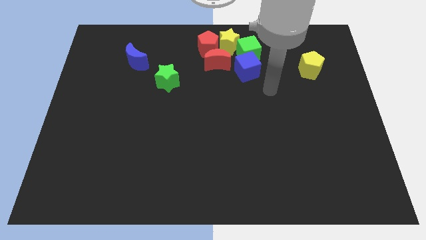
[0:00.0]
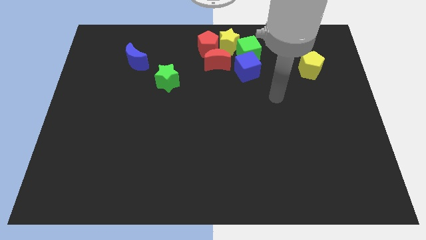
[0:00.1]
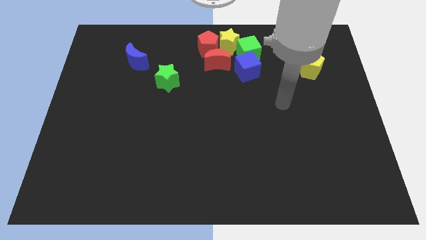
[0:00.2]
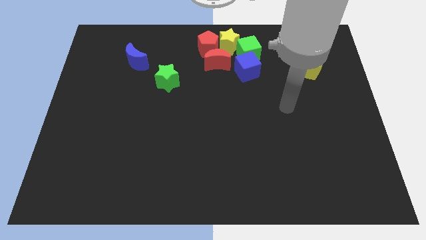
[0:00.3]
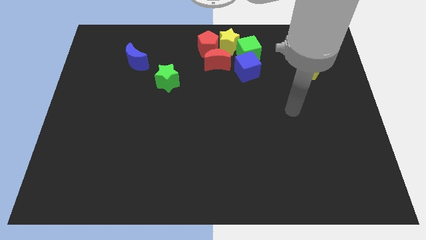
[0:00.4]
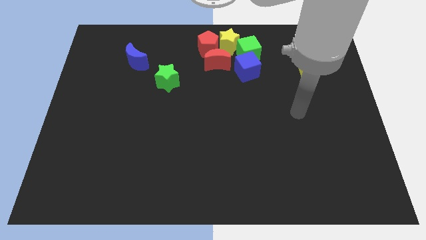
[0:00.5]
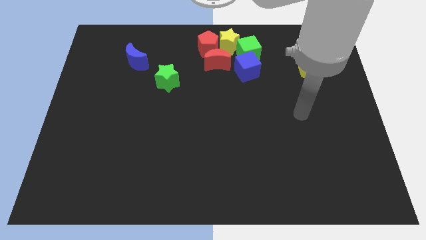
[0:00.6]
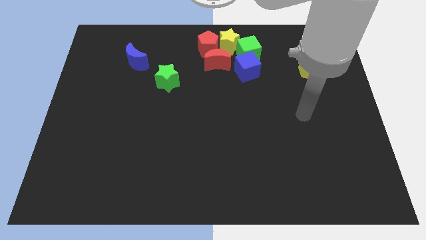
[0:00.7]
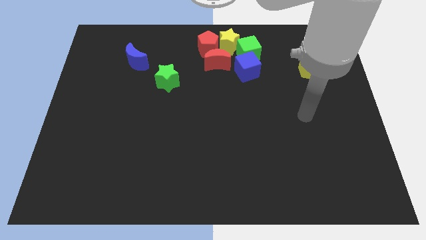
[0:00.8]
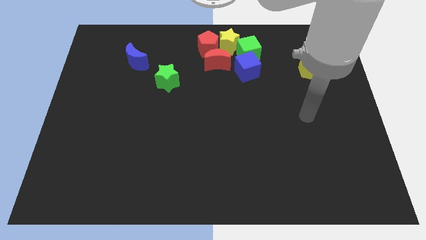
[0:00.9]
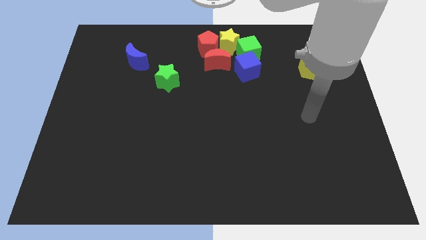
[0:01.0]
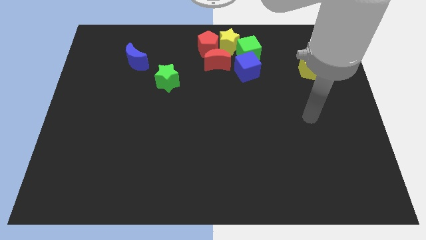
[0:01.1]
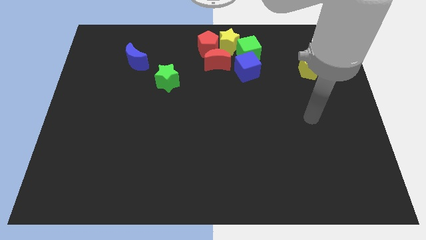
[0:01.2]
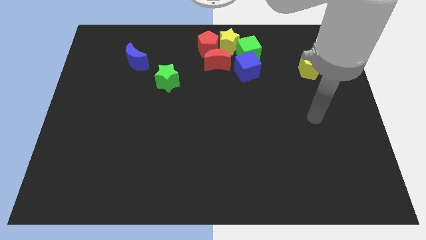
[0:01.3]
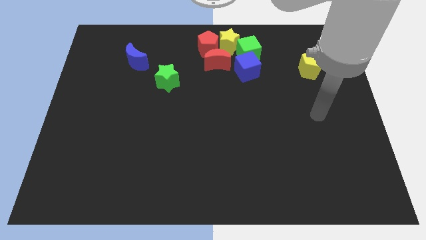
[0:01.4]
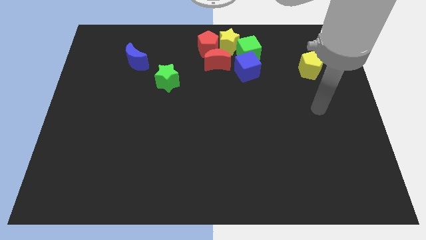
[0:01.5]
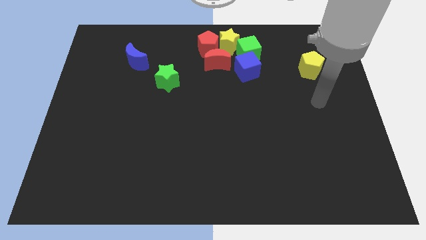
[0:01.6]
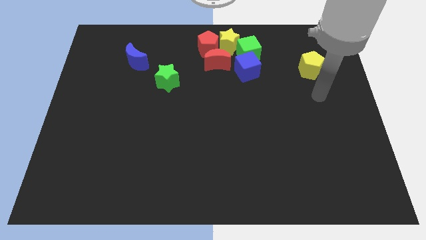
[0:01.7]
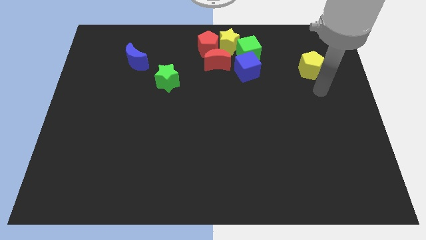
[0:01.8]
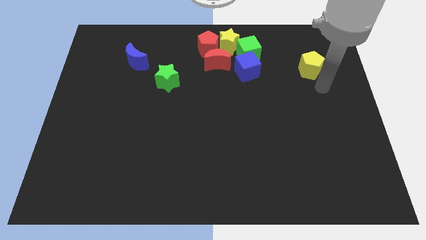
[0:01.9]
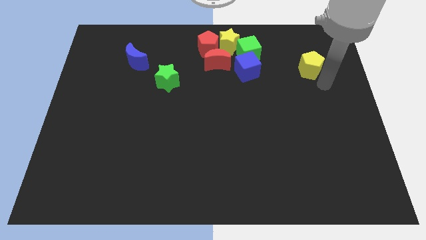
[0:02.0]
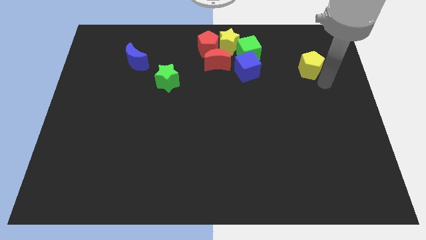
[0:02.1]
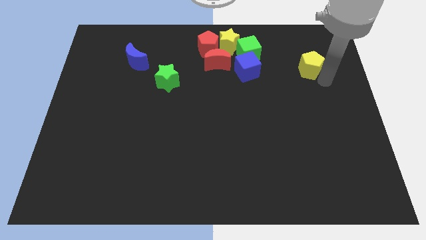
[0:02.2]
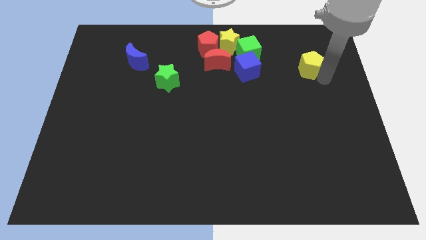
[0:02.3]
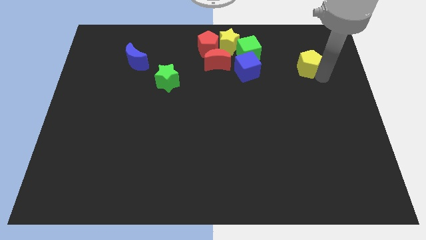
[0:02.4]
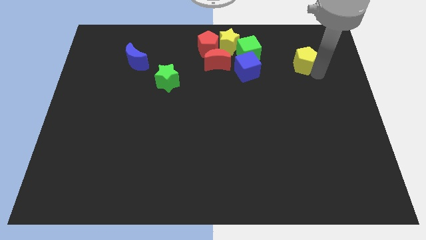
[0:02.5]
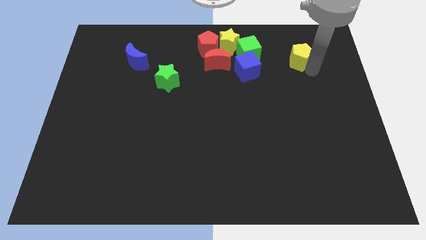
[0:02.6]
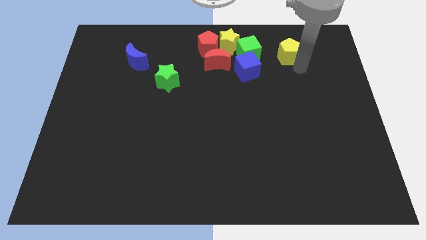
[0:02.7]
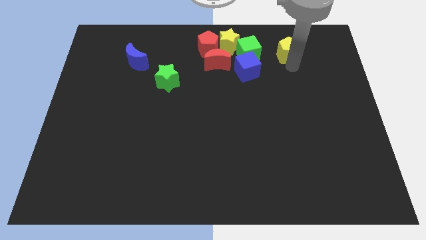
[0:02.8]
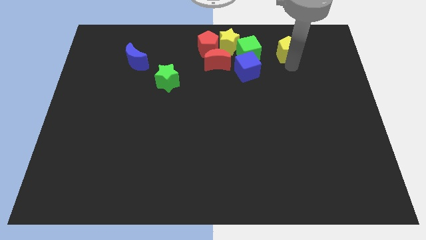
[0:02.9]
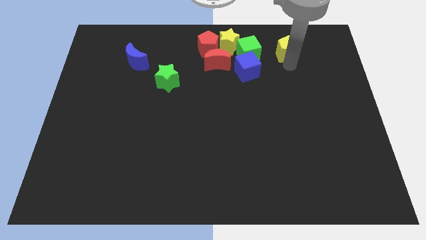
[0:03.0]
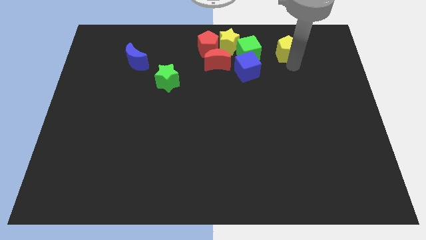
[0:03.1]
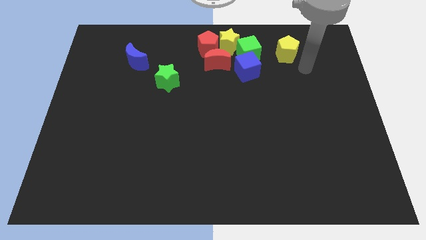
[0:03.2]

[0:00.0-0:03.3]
slide the yellow pentagon to the right side of the green cube

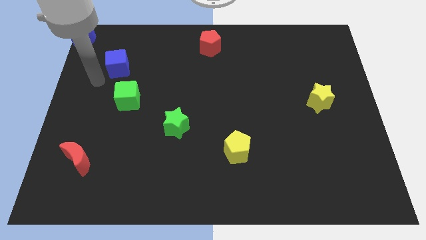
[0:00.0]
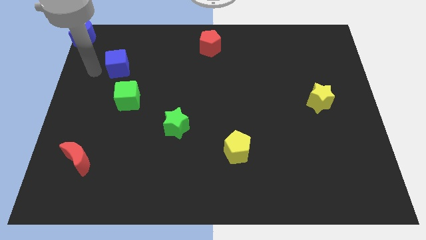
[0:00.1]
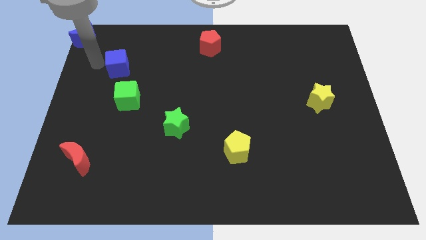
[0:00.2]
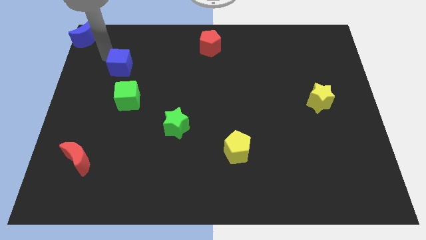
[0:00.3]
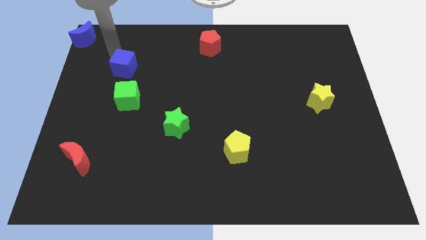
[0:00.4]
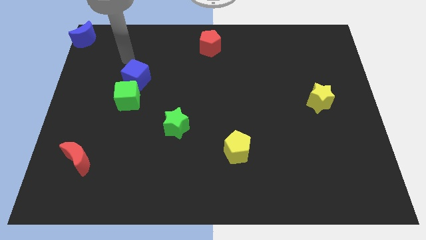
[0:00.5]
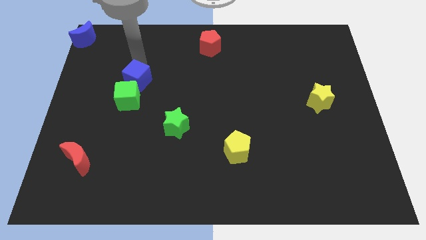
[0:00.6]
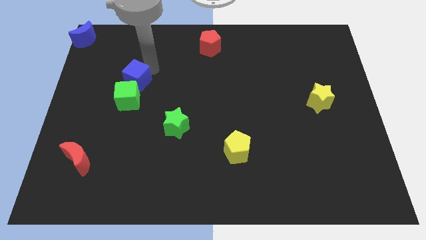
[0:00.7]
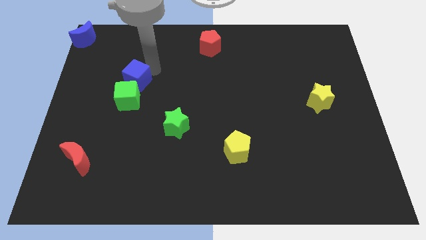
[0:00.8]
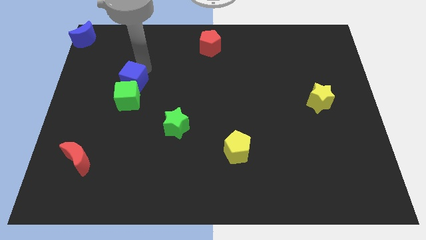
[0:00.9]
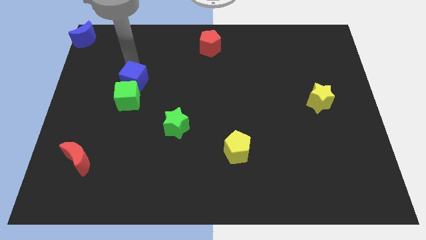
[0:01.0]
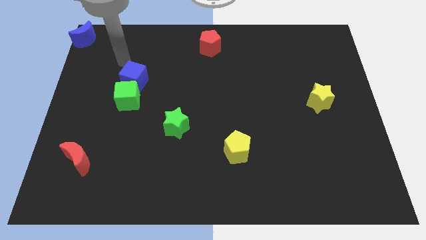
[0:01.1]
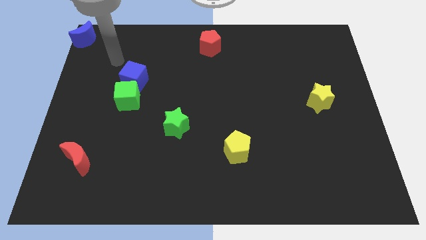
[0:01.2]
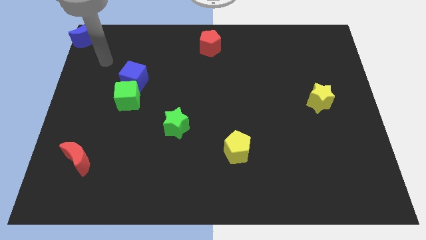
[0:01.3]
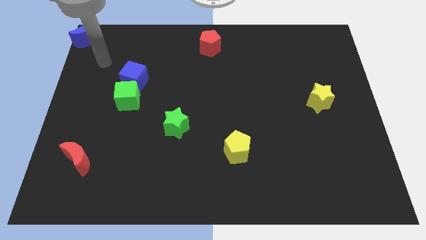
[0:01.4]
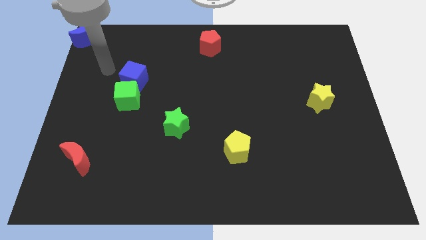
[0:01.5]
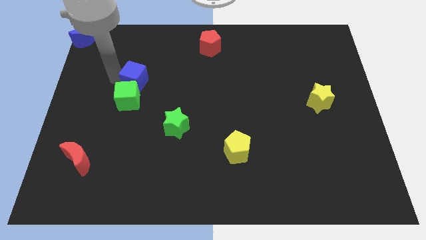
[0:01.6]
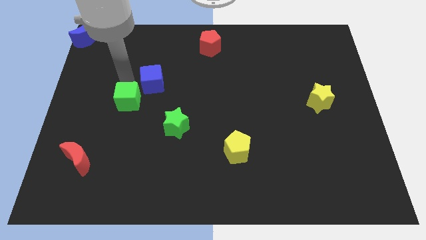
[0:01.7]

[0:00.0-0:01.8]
move blue cube into green cube

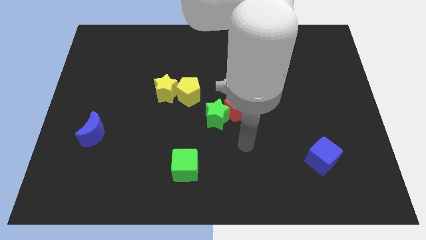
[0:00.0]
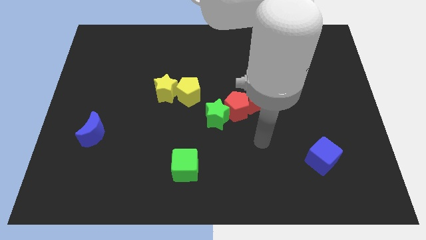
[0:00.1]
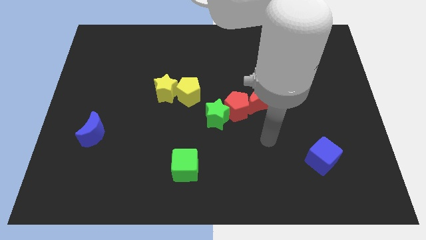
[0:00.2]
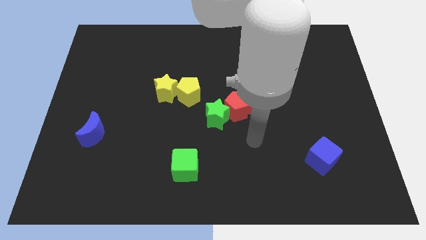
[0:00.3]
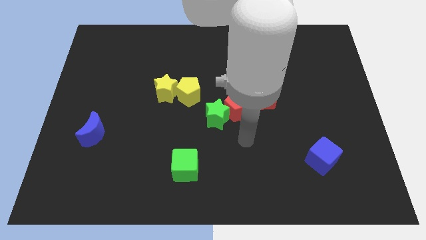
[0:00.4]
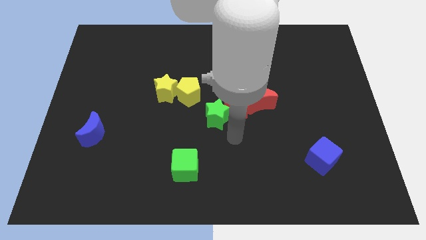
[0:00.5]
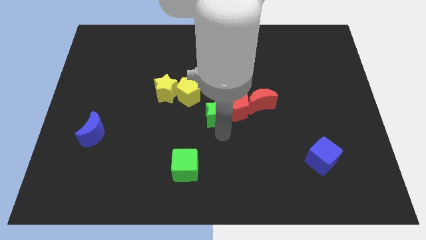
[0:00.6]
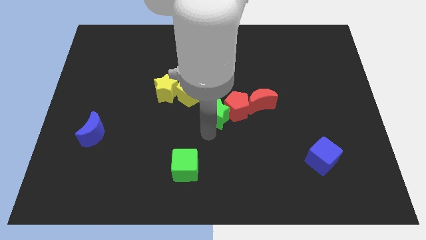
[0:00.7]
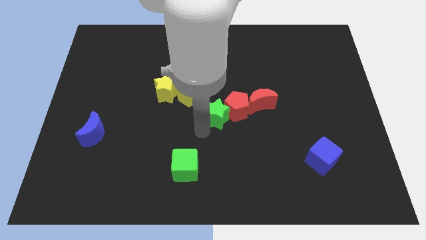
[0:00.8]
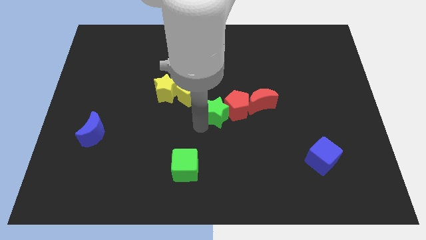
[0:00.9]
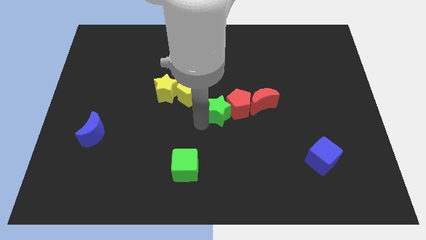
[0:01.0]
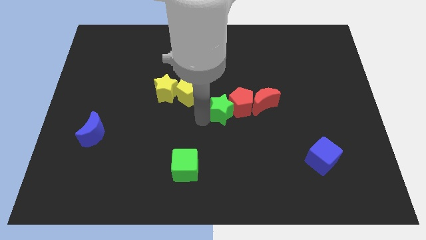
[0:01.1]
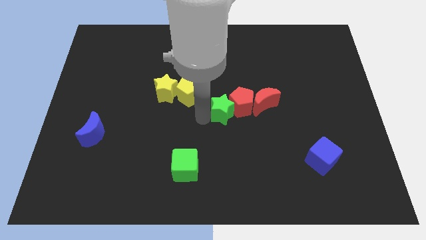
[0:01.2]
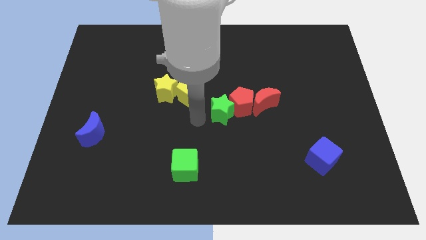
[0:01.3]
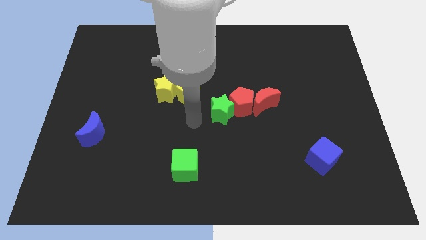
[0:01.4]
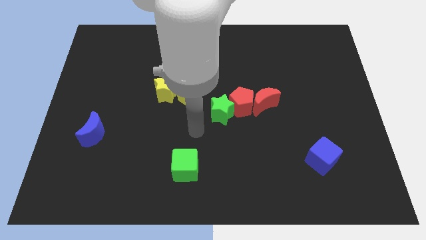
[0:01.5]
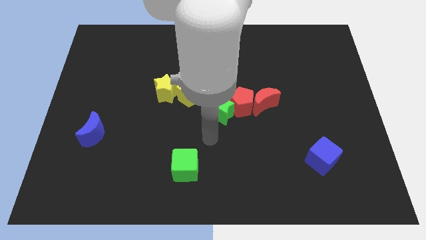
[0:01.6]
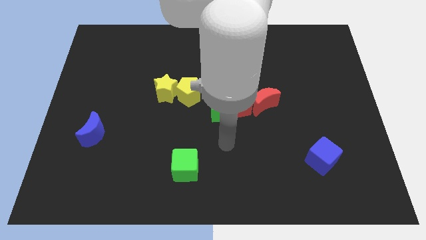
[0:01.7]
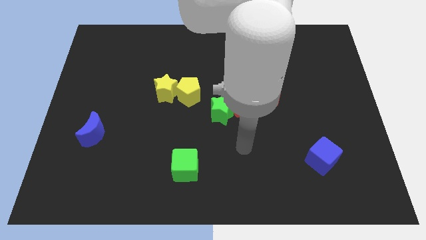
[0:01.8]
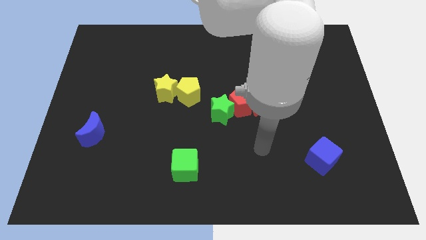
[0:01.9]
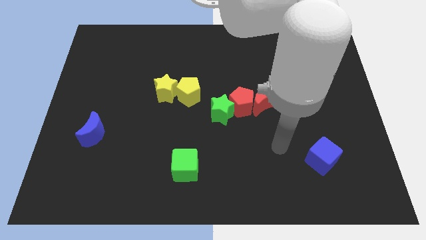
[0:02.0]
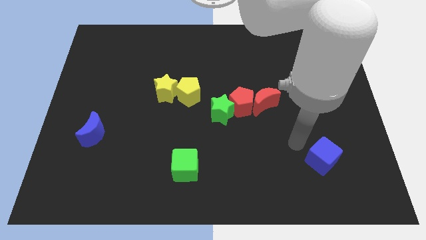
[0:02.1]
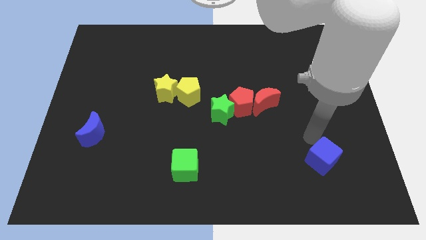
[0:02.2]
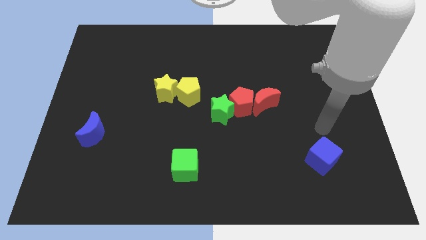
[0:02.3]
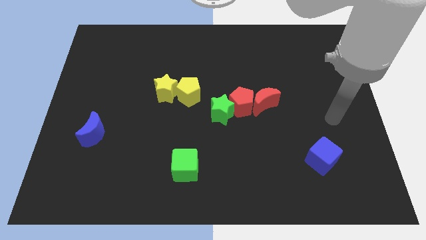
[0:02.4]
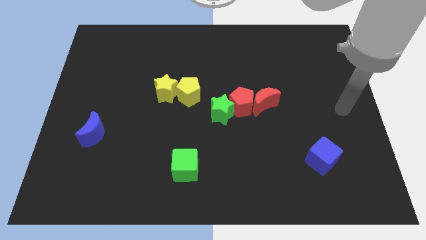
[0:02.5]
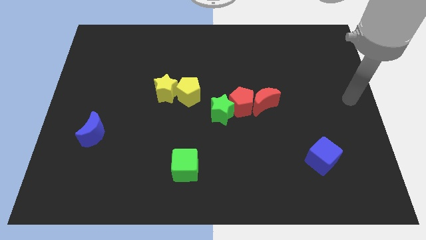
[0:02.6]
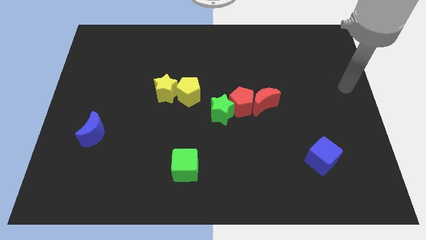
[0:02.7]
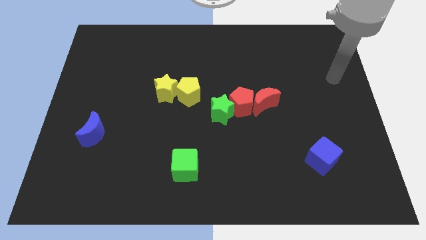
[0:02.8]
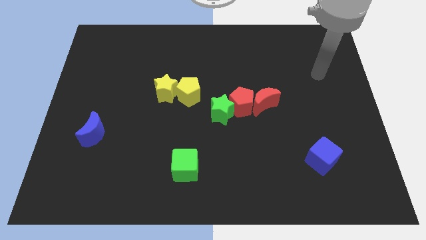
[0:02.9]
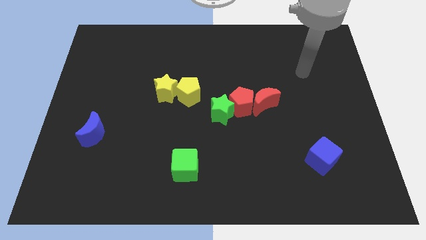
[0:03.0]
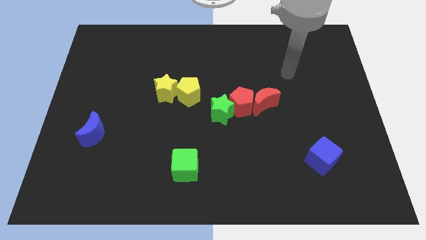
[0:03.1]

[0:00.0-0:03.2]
touch the green star

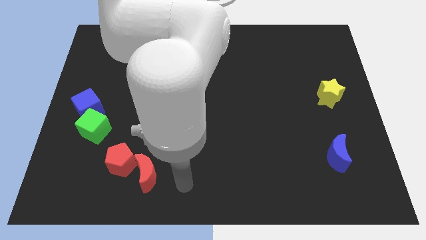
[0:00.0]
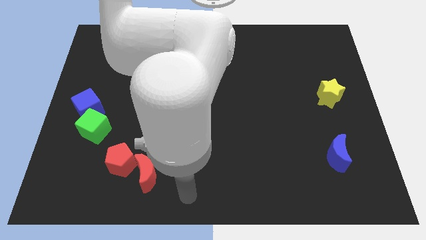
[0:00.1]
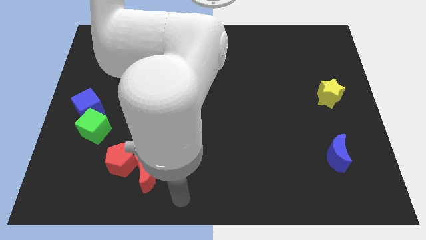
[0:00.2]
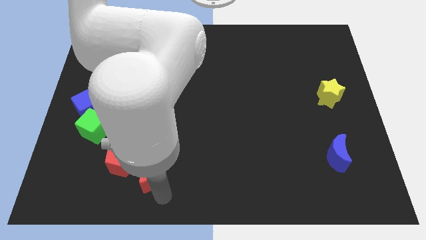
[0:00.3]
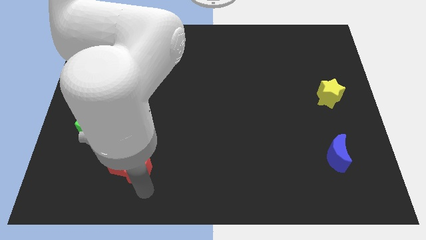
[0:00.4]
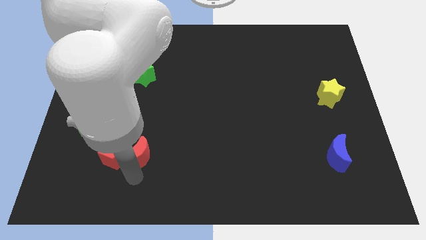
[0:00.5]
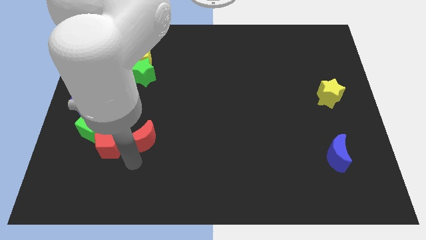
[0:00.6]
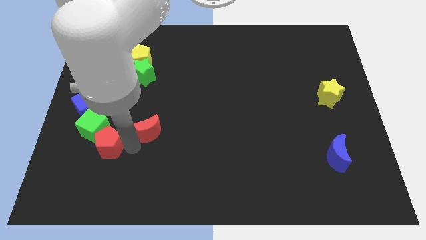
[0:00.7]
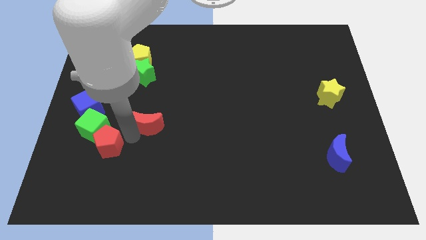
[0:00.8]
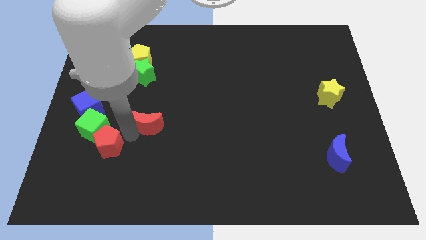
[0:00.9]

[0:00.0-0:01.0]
push a group of blocks to the left side of the board
